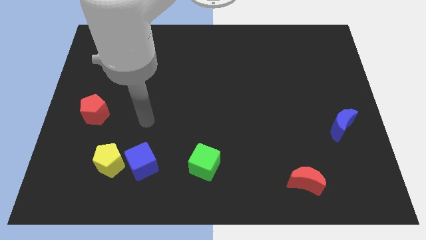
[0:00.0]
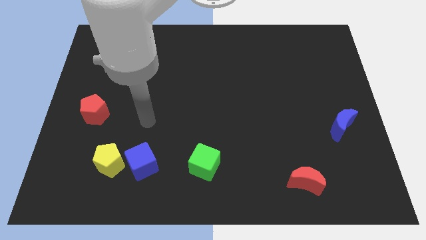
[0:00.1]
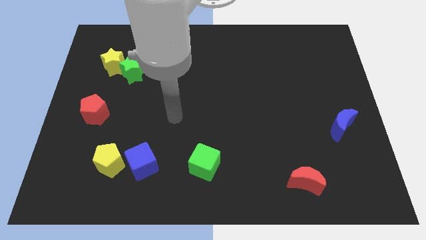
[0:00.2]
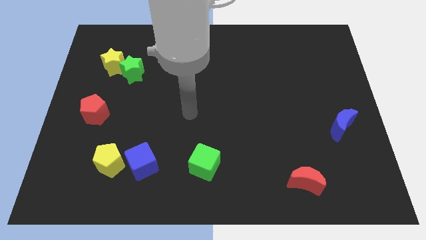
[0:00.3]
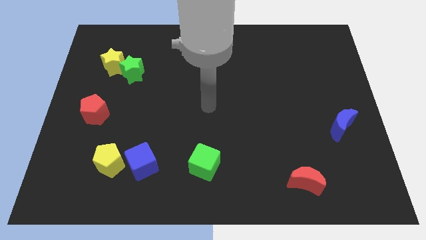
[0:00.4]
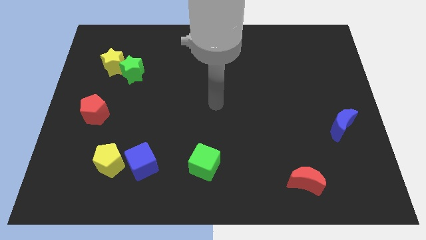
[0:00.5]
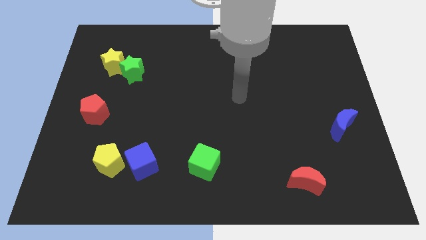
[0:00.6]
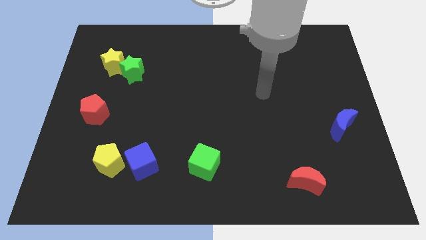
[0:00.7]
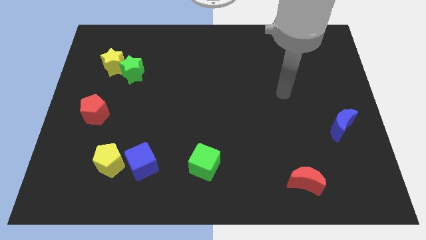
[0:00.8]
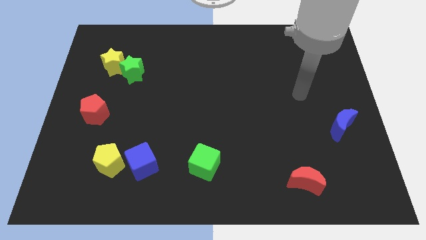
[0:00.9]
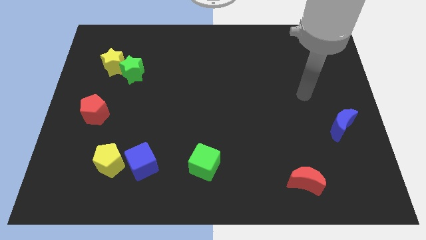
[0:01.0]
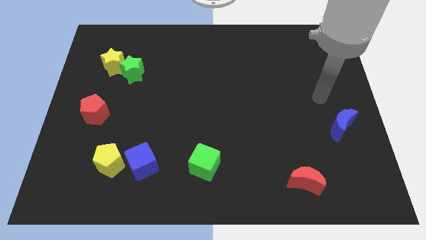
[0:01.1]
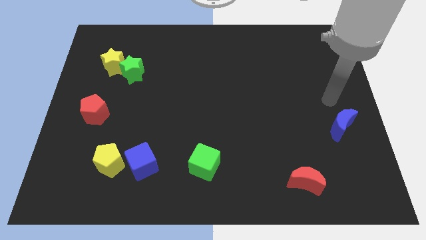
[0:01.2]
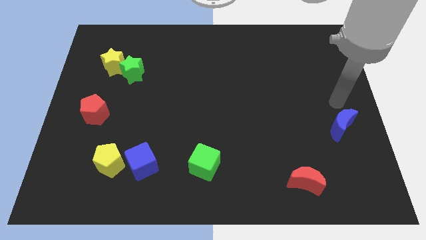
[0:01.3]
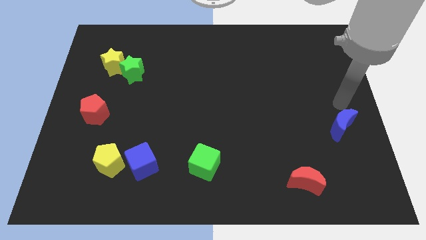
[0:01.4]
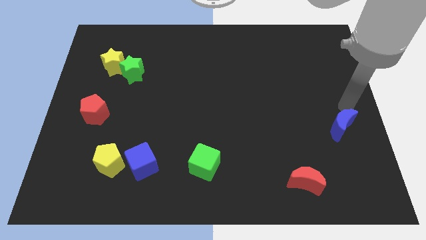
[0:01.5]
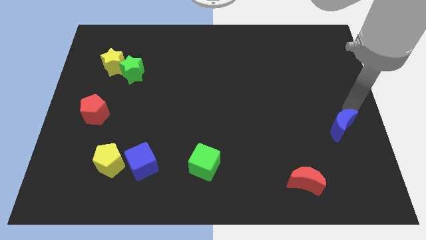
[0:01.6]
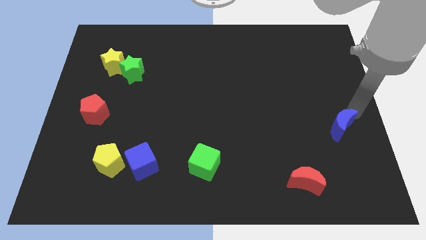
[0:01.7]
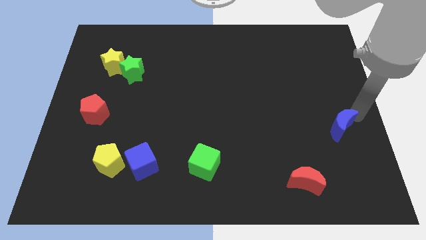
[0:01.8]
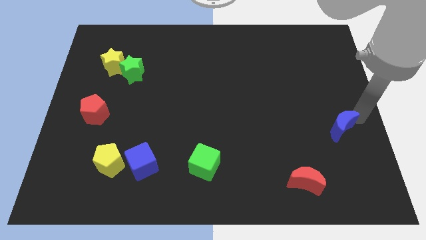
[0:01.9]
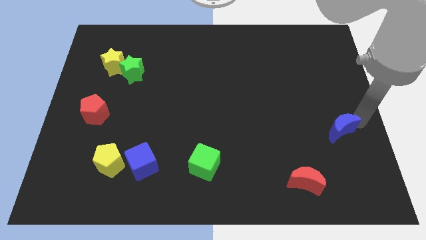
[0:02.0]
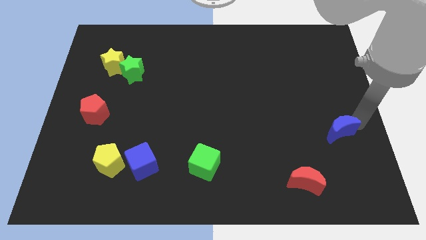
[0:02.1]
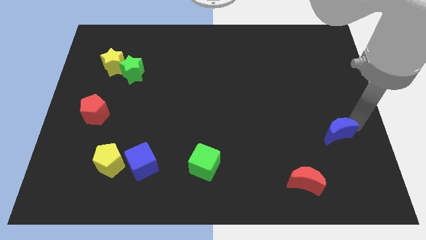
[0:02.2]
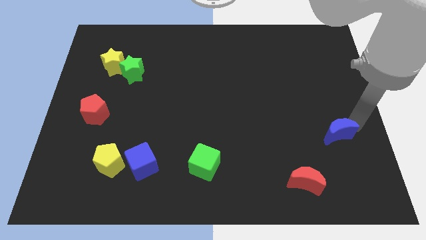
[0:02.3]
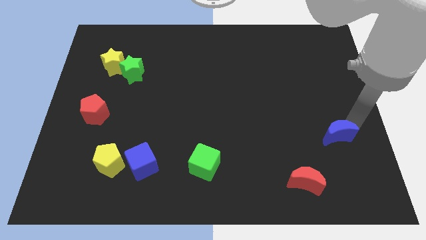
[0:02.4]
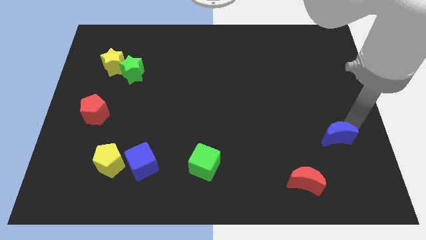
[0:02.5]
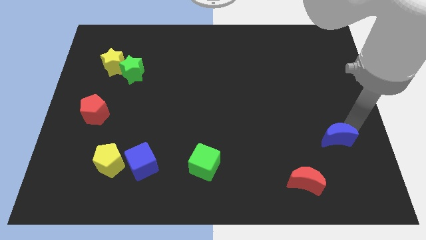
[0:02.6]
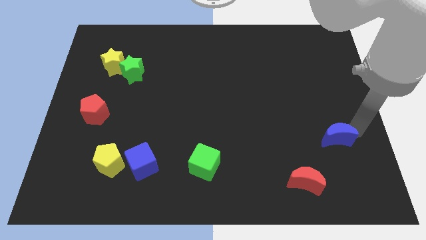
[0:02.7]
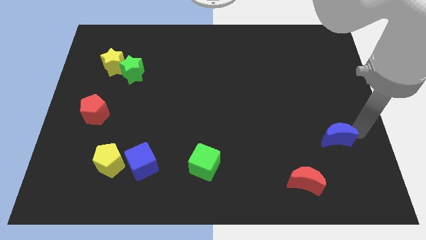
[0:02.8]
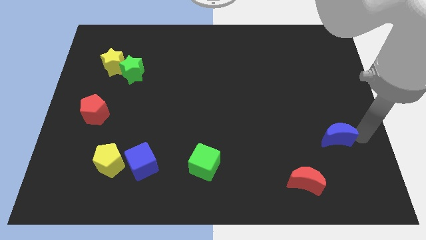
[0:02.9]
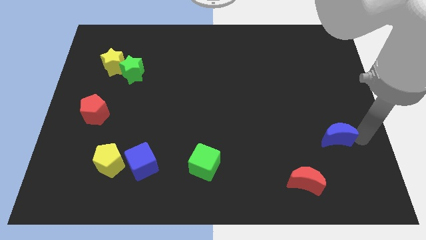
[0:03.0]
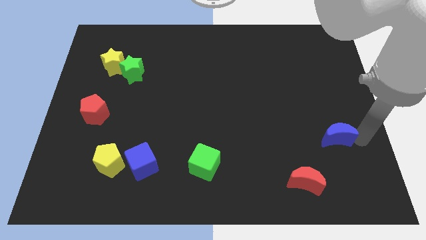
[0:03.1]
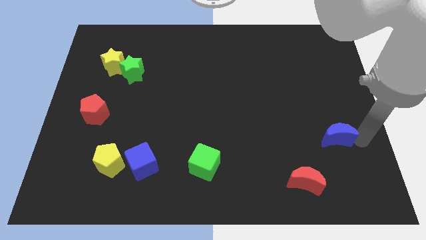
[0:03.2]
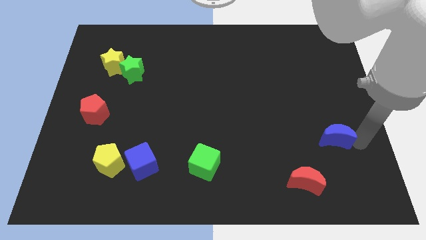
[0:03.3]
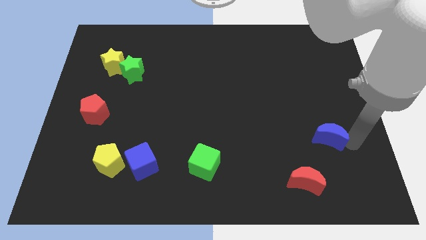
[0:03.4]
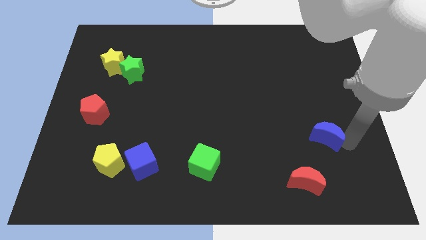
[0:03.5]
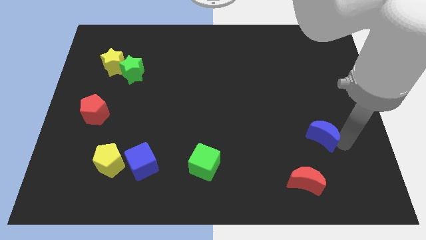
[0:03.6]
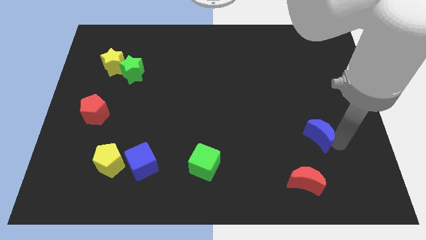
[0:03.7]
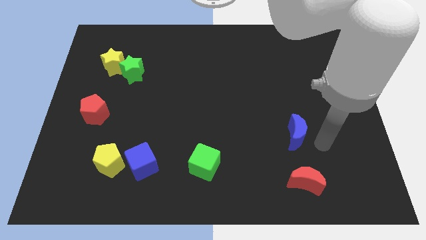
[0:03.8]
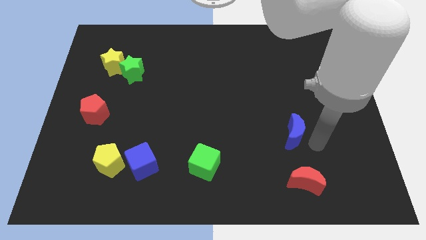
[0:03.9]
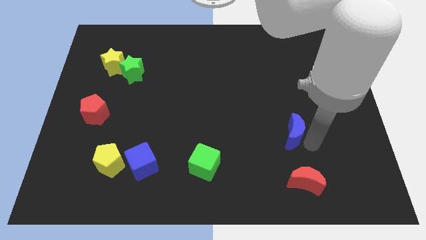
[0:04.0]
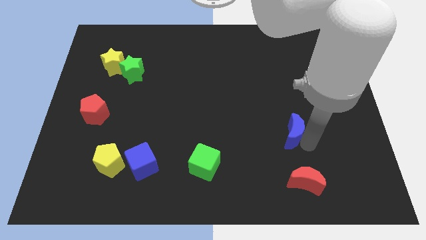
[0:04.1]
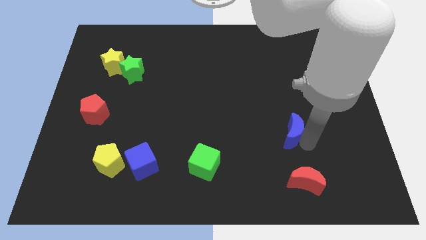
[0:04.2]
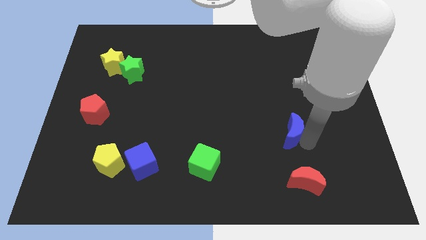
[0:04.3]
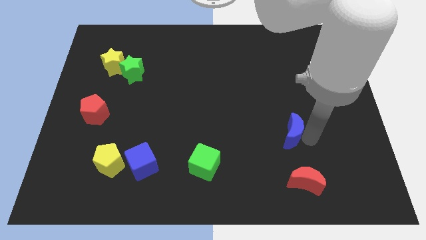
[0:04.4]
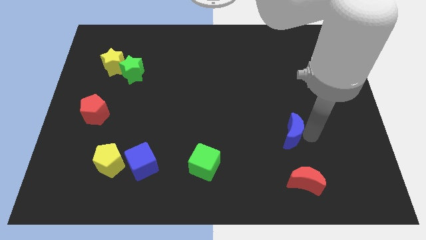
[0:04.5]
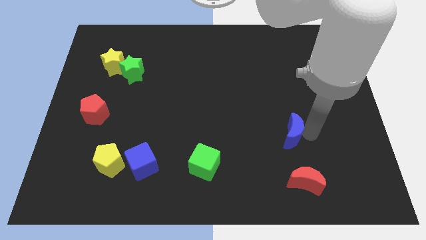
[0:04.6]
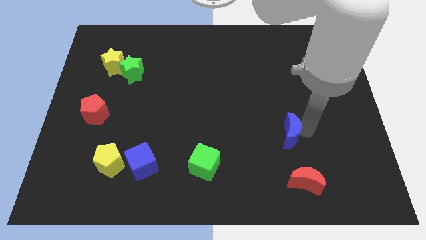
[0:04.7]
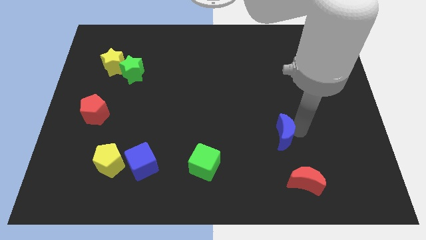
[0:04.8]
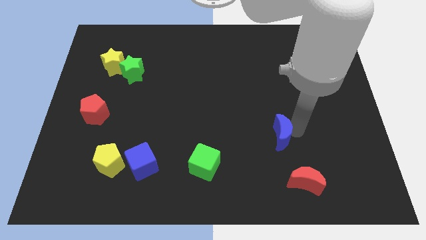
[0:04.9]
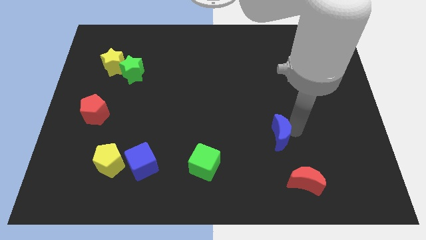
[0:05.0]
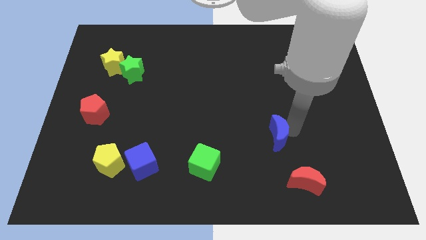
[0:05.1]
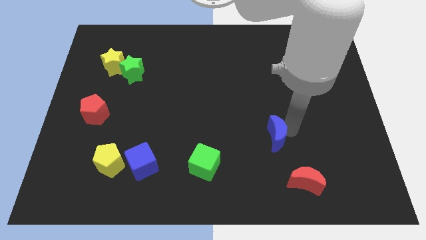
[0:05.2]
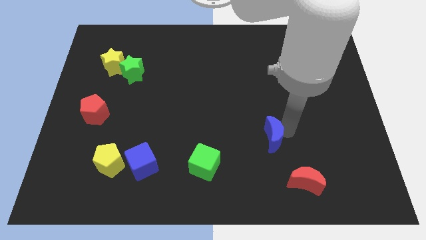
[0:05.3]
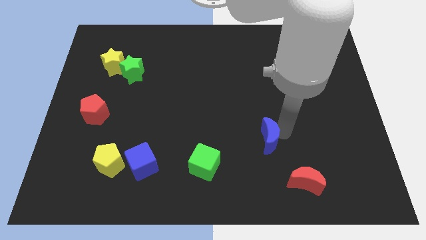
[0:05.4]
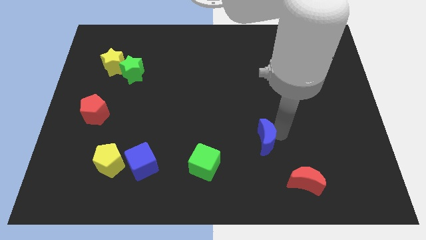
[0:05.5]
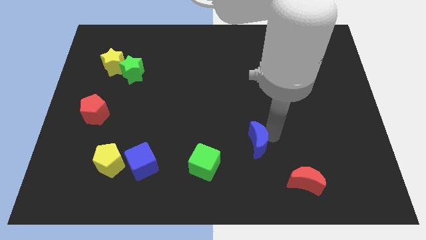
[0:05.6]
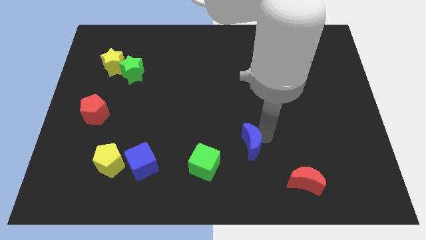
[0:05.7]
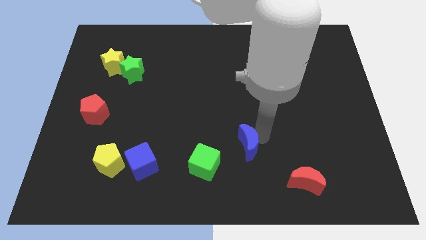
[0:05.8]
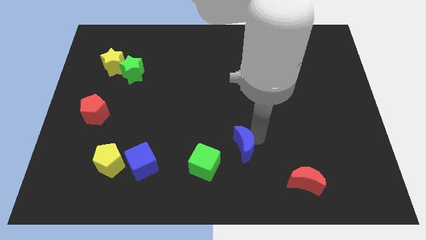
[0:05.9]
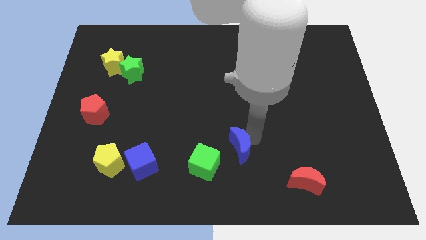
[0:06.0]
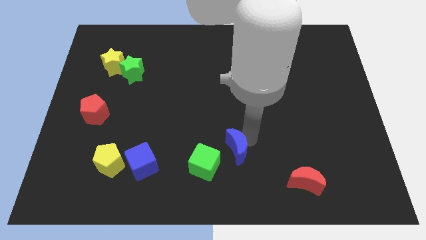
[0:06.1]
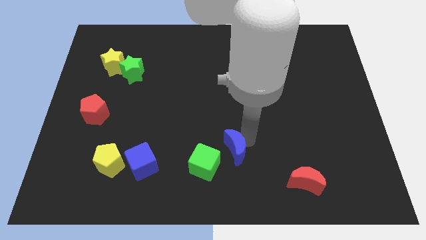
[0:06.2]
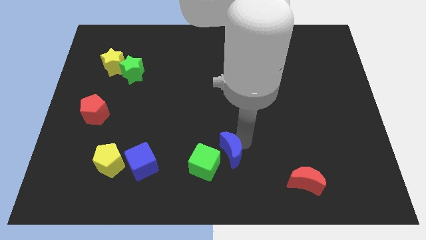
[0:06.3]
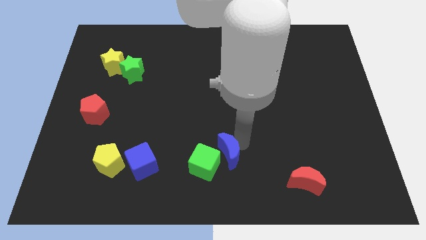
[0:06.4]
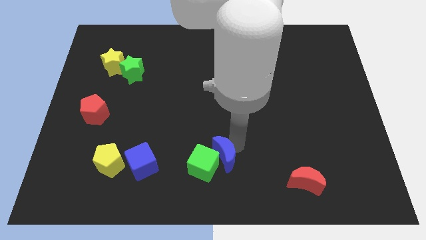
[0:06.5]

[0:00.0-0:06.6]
put the blue moon close to the green cube

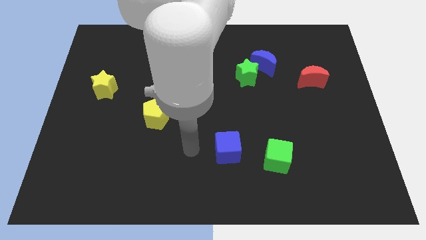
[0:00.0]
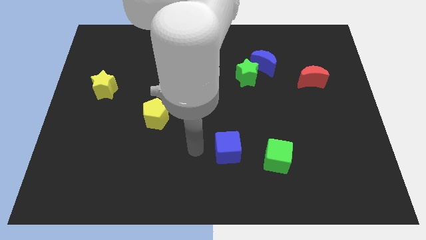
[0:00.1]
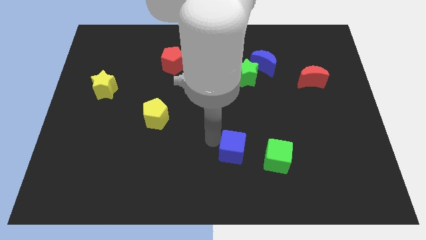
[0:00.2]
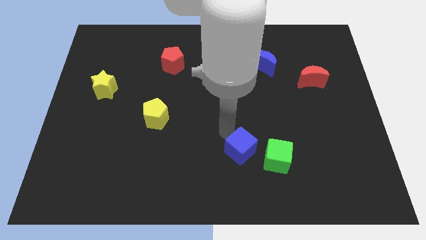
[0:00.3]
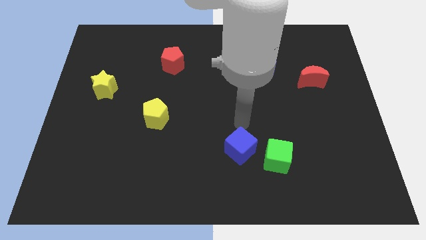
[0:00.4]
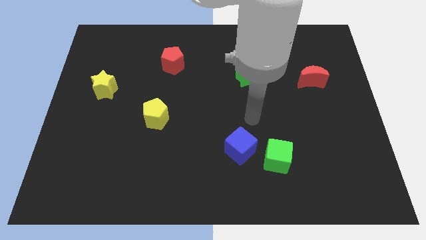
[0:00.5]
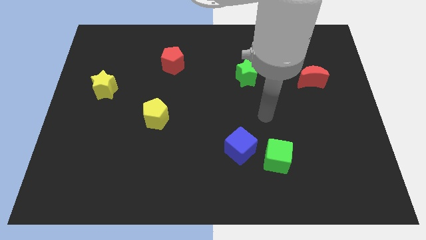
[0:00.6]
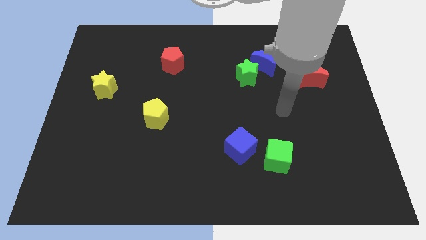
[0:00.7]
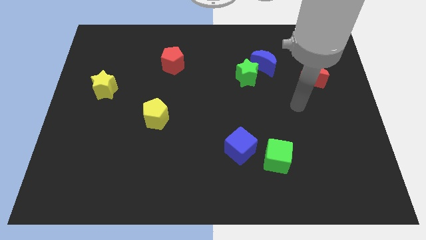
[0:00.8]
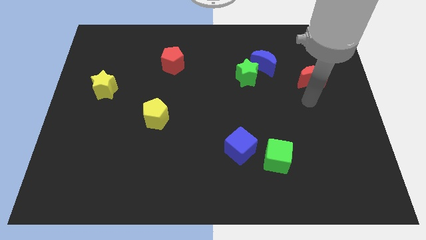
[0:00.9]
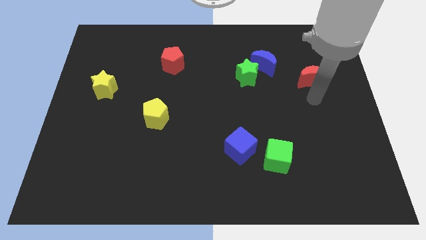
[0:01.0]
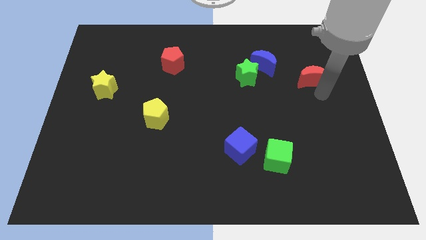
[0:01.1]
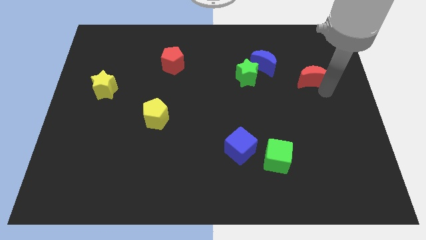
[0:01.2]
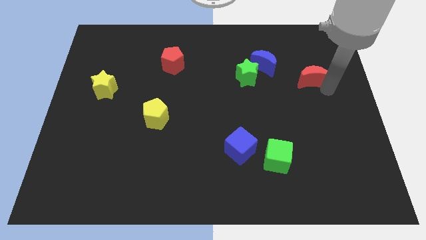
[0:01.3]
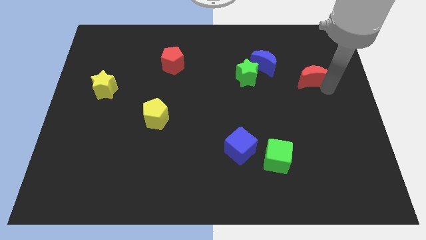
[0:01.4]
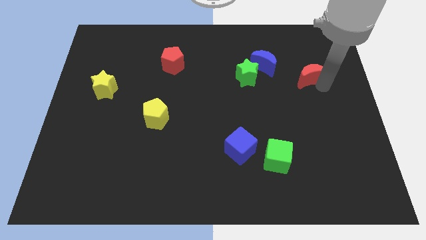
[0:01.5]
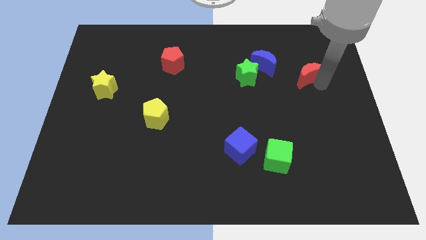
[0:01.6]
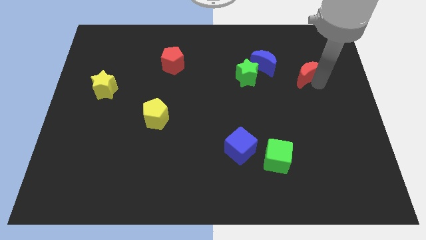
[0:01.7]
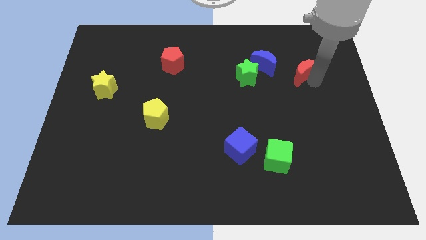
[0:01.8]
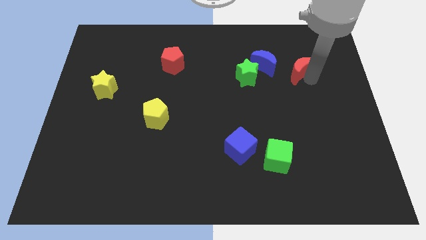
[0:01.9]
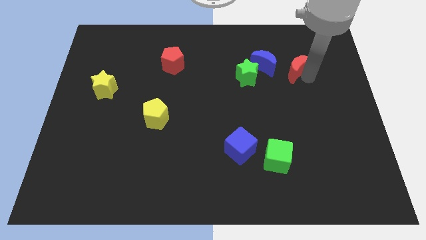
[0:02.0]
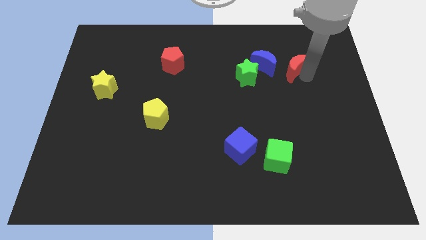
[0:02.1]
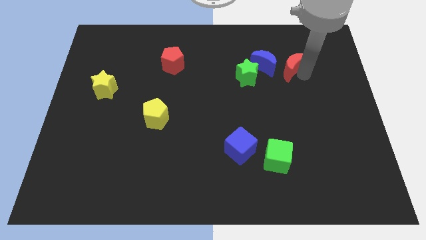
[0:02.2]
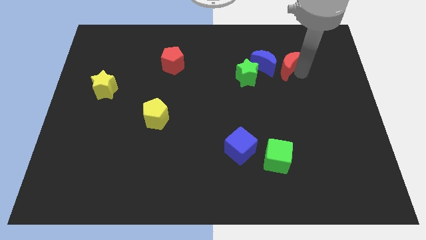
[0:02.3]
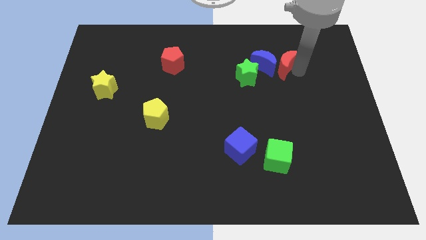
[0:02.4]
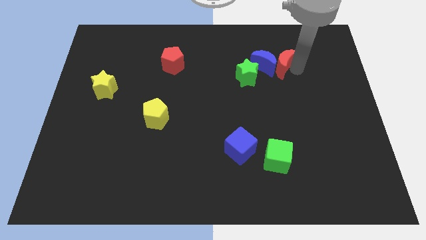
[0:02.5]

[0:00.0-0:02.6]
push the red moon towards the blue moon
